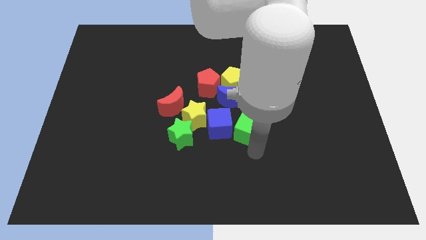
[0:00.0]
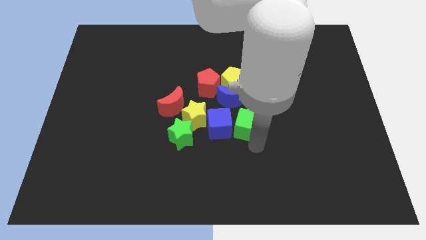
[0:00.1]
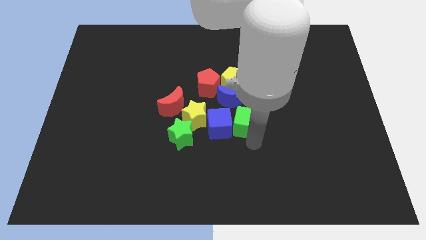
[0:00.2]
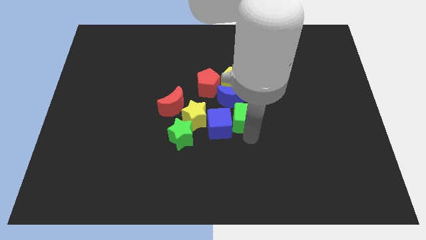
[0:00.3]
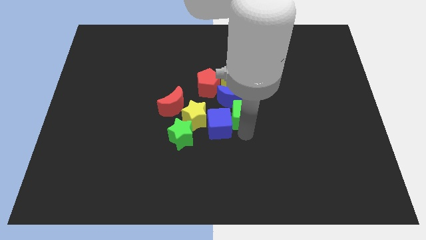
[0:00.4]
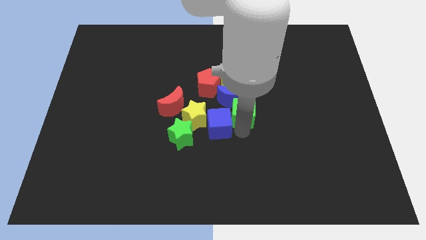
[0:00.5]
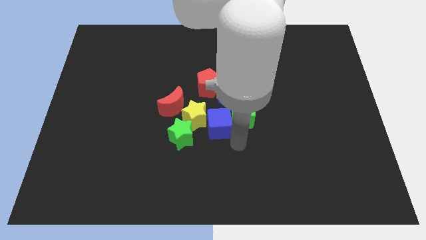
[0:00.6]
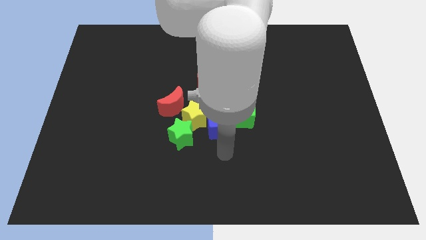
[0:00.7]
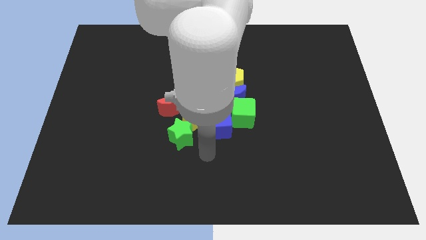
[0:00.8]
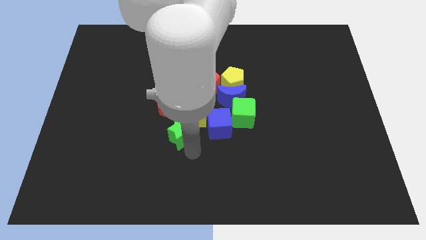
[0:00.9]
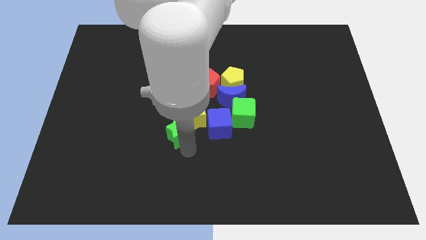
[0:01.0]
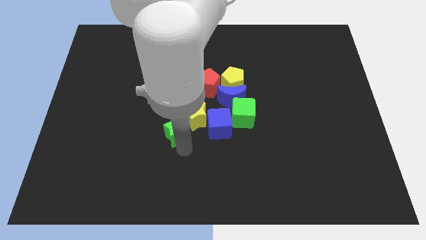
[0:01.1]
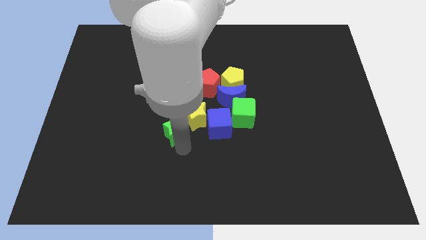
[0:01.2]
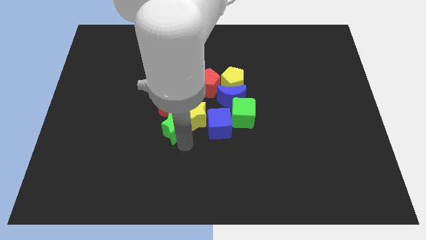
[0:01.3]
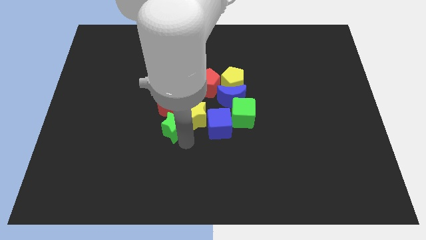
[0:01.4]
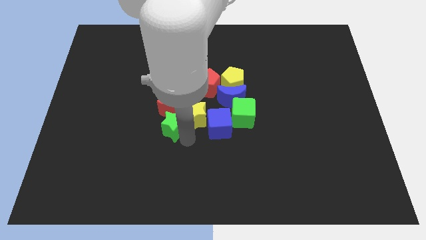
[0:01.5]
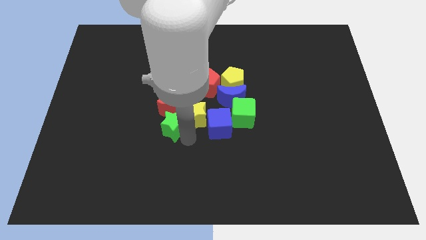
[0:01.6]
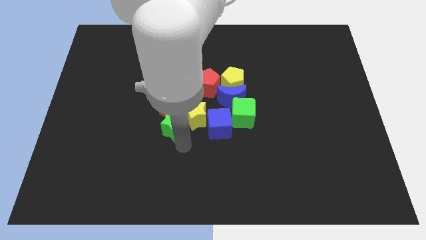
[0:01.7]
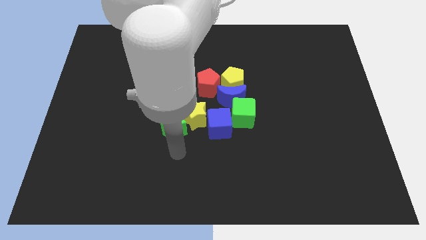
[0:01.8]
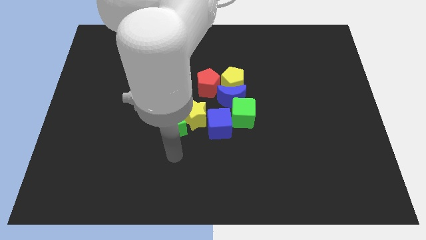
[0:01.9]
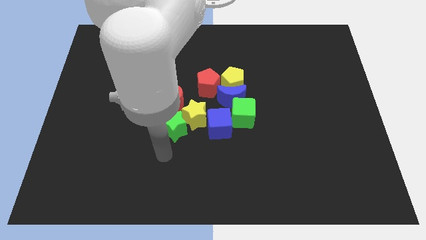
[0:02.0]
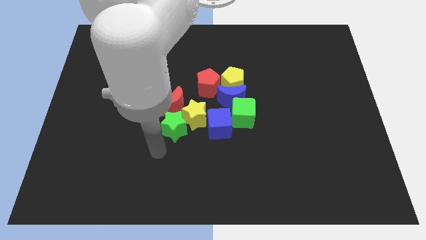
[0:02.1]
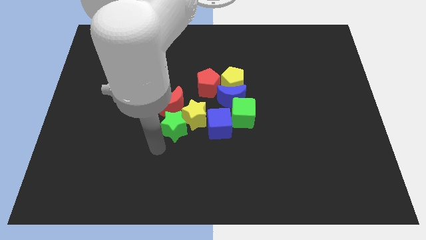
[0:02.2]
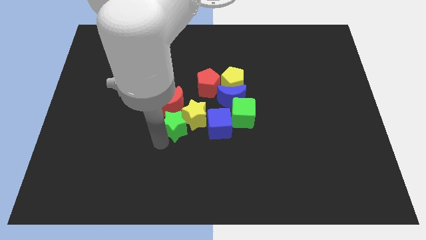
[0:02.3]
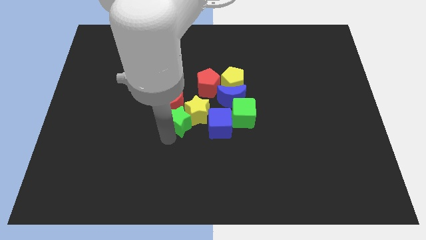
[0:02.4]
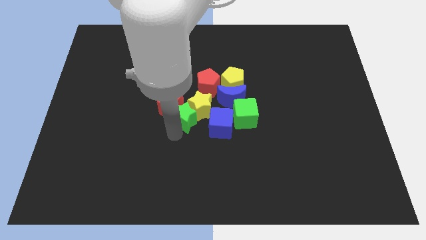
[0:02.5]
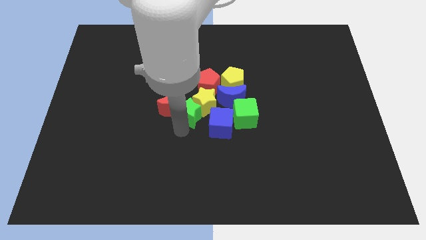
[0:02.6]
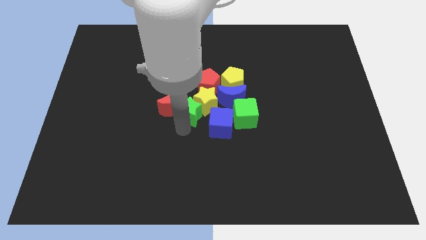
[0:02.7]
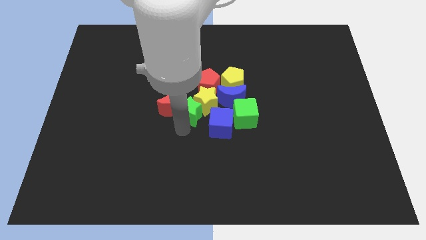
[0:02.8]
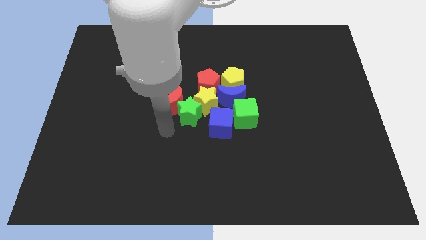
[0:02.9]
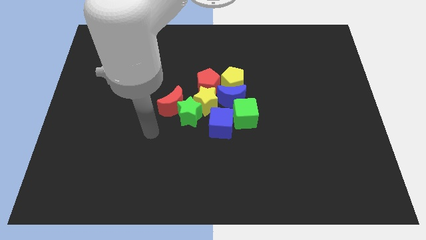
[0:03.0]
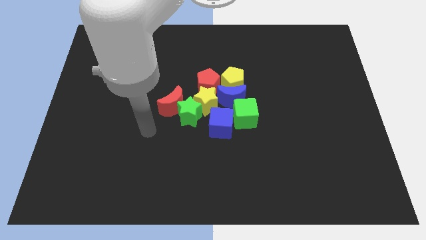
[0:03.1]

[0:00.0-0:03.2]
push the group of stars to the bottom of the red pentagon

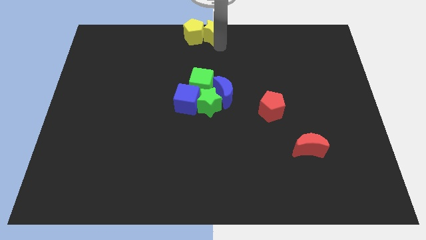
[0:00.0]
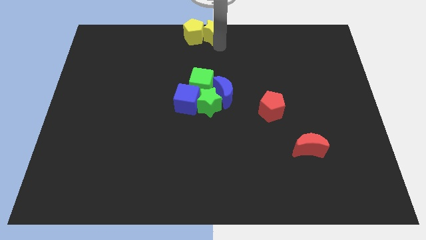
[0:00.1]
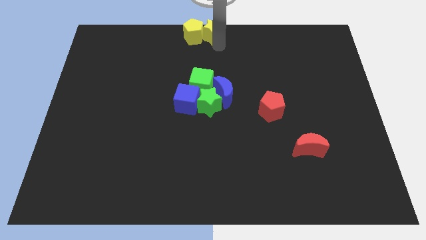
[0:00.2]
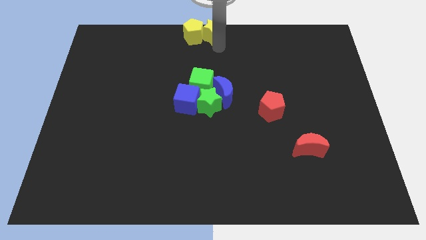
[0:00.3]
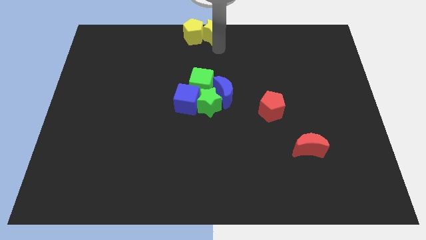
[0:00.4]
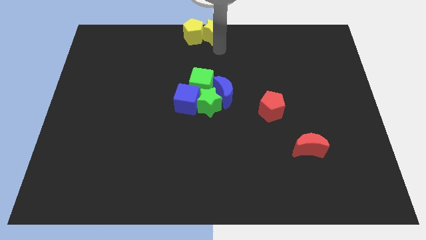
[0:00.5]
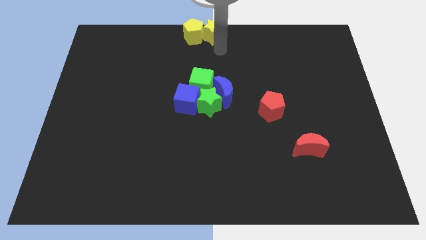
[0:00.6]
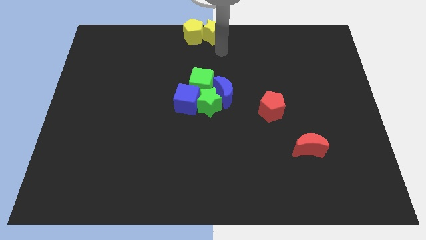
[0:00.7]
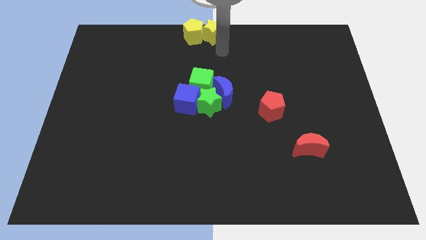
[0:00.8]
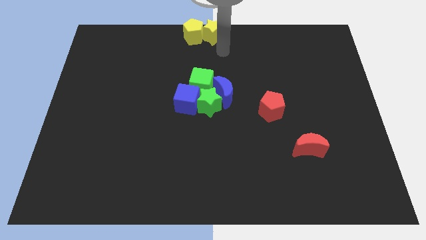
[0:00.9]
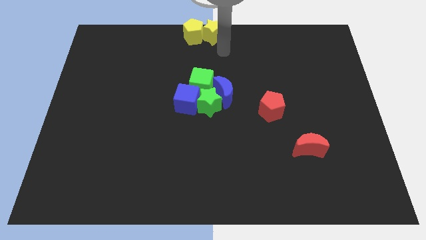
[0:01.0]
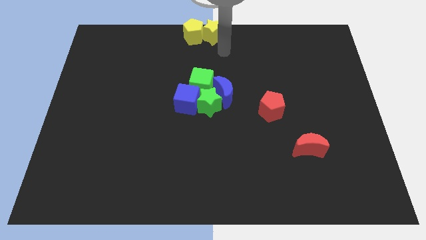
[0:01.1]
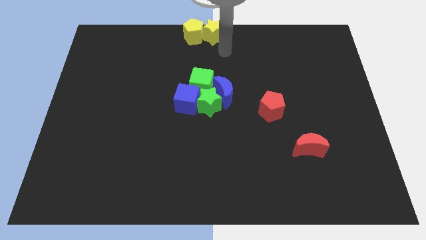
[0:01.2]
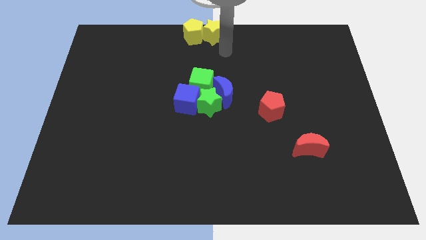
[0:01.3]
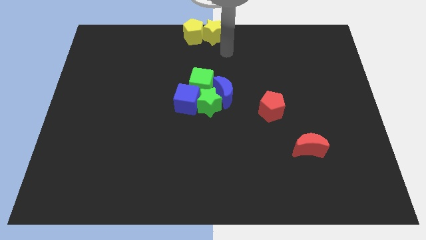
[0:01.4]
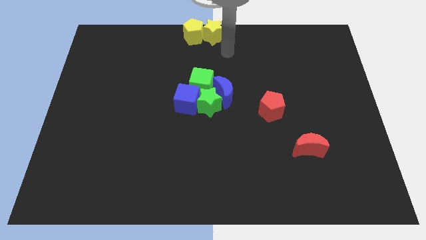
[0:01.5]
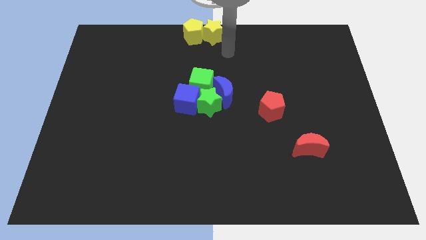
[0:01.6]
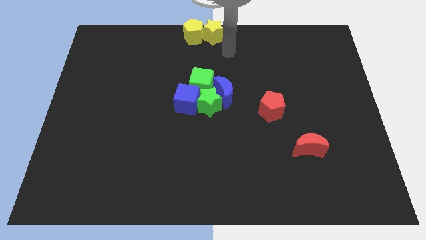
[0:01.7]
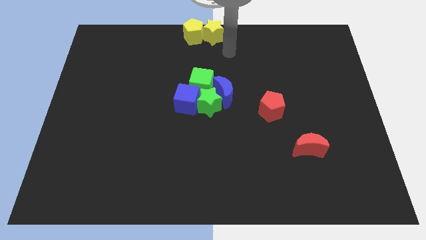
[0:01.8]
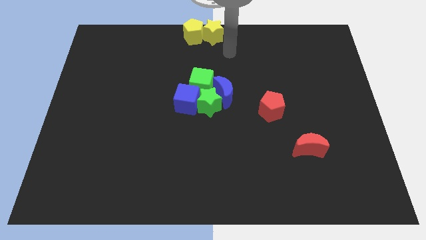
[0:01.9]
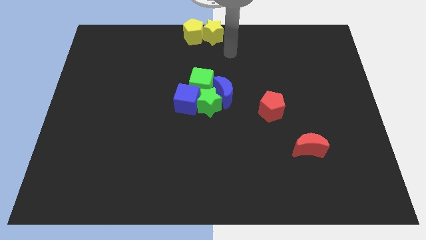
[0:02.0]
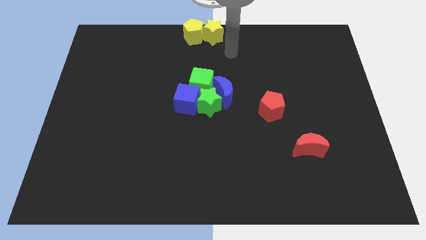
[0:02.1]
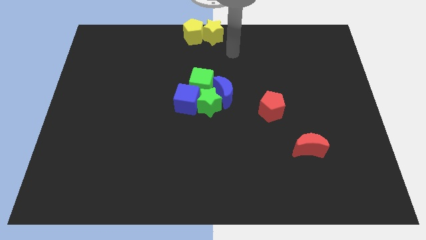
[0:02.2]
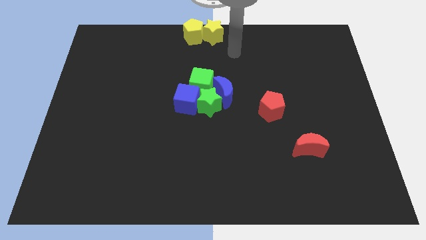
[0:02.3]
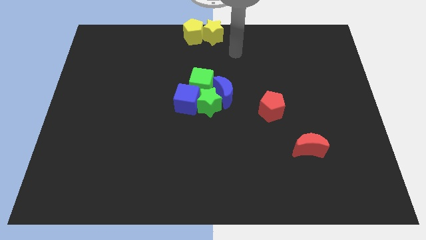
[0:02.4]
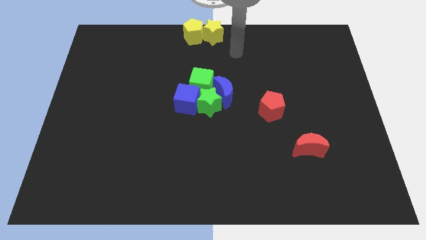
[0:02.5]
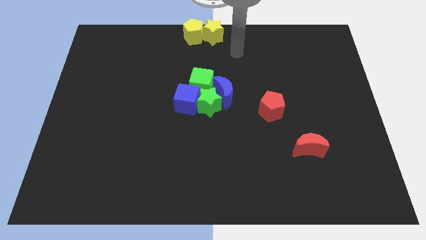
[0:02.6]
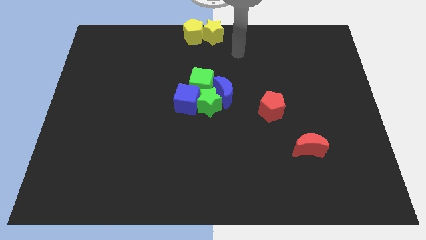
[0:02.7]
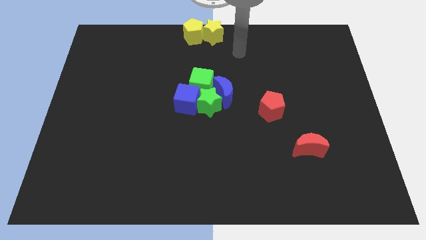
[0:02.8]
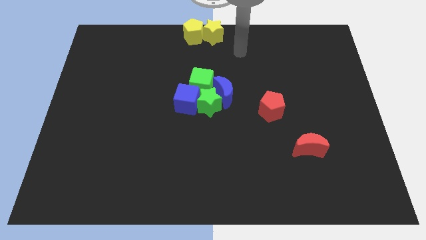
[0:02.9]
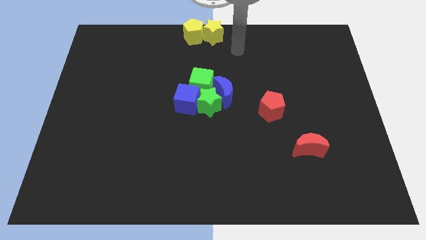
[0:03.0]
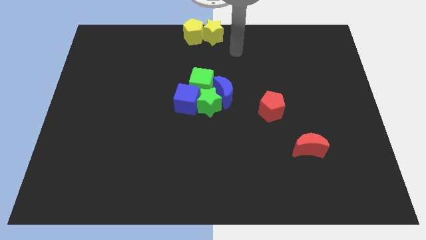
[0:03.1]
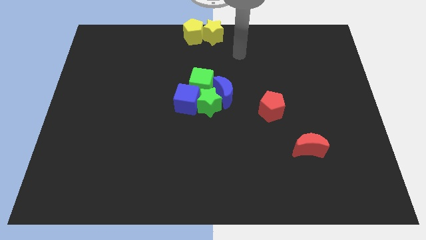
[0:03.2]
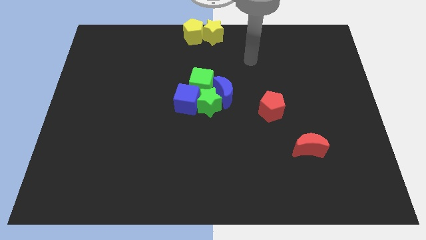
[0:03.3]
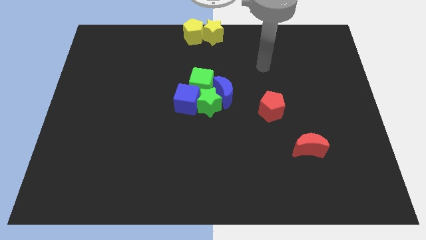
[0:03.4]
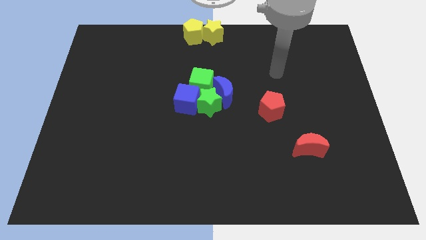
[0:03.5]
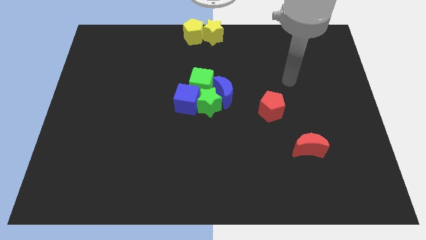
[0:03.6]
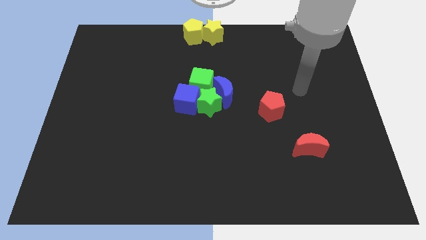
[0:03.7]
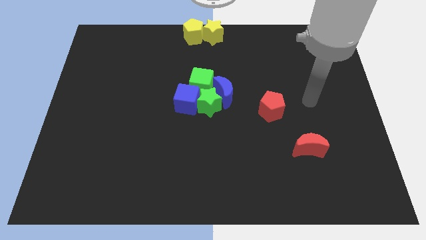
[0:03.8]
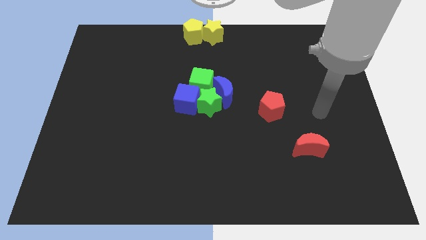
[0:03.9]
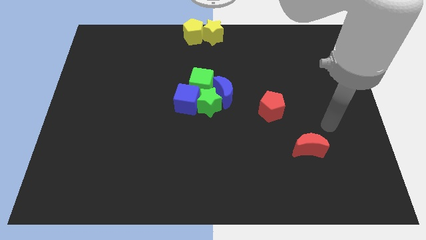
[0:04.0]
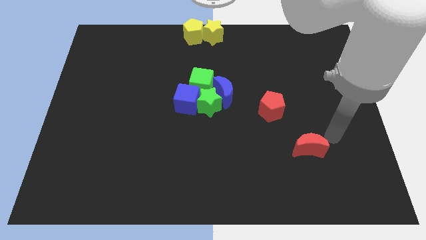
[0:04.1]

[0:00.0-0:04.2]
move your arm to the right of red moon

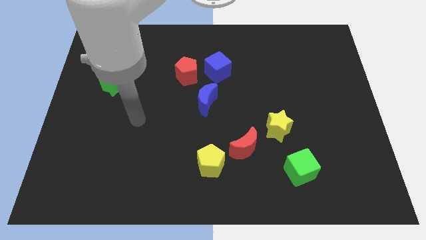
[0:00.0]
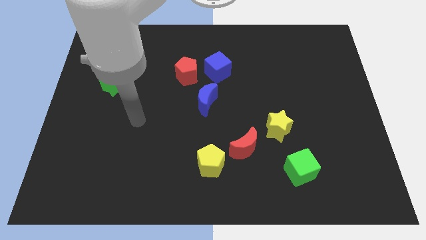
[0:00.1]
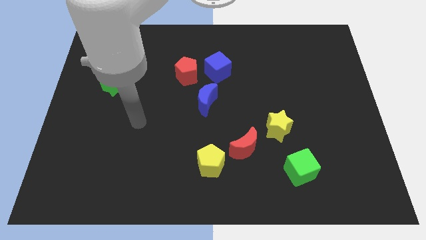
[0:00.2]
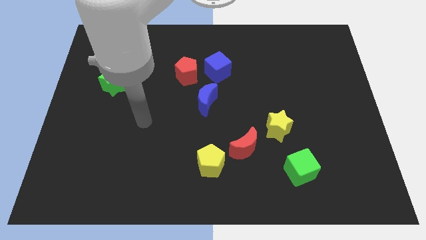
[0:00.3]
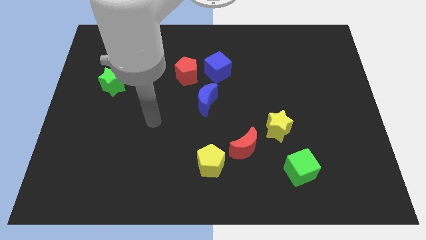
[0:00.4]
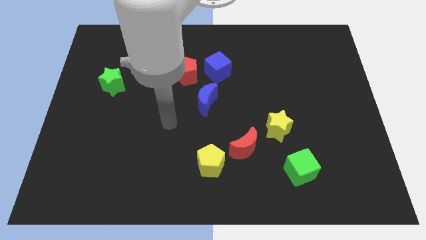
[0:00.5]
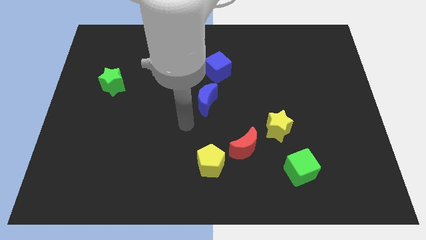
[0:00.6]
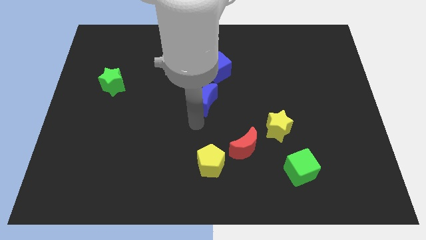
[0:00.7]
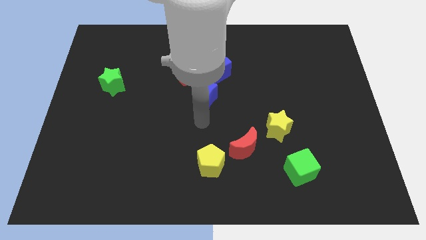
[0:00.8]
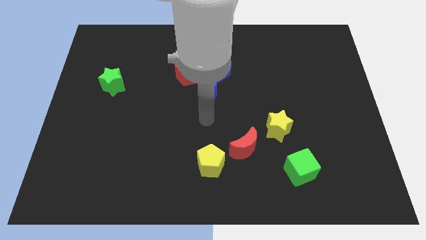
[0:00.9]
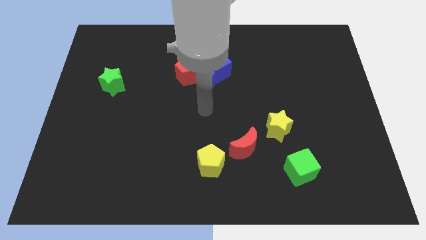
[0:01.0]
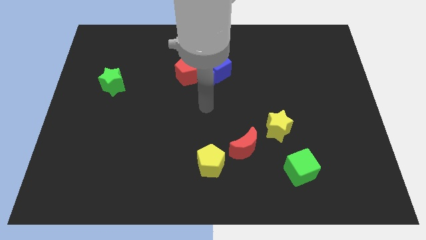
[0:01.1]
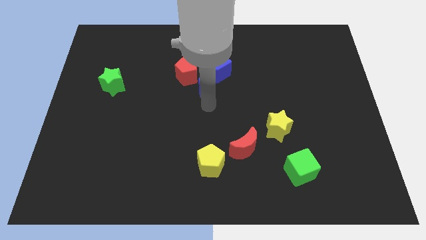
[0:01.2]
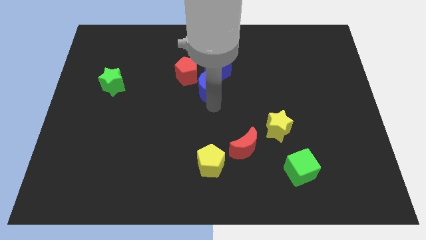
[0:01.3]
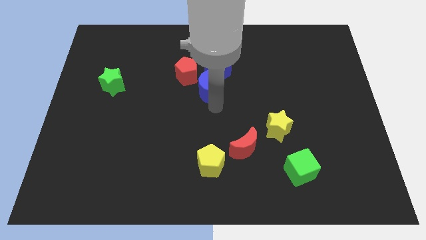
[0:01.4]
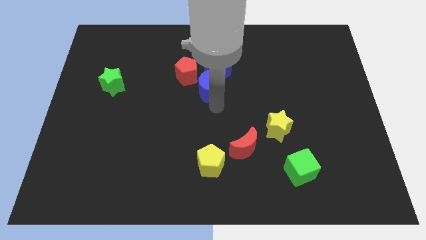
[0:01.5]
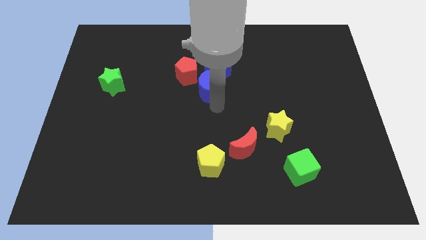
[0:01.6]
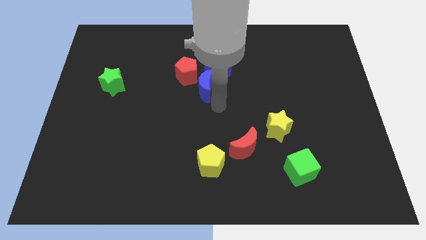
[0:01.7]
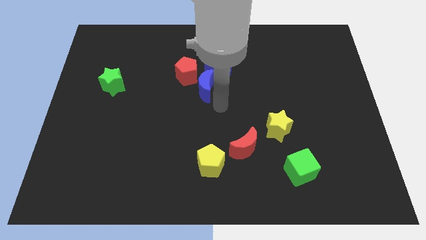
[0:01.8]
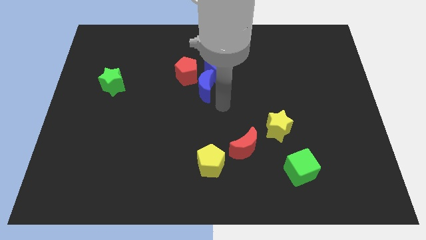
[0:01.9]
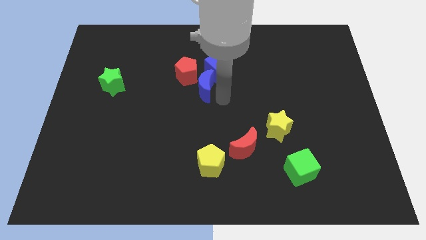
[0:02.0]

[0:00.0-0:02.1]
put the blue semi circle into the blue cube
